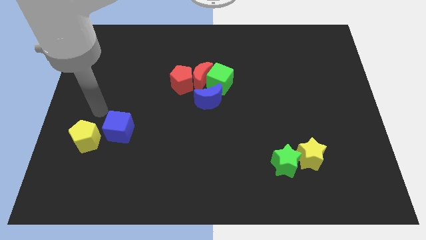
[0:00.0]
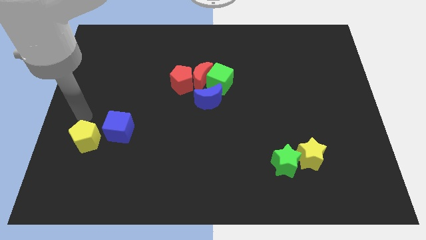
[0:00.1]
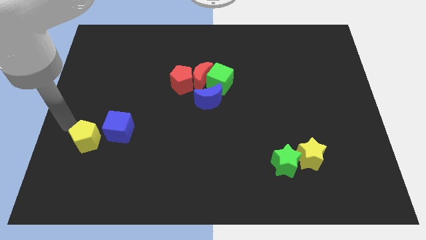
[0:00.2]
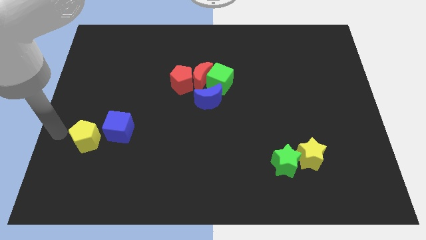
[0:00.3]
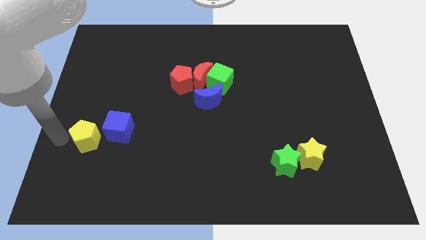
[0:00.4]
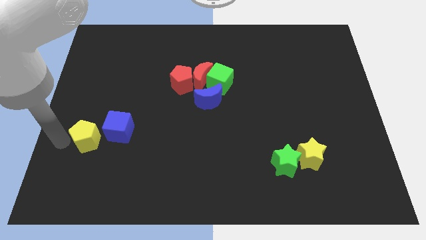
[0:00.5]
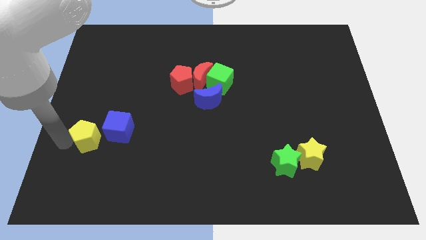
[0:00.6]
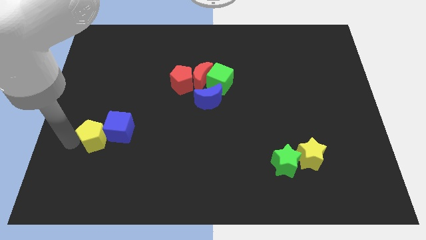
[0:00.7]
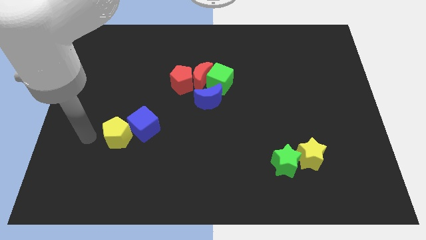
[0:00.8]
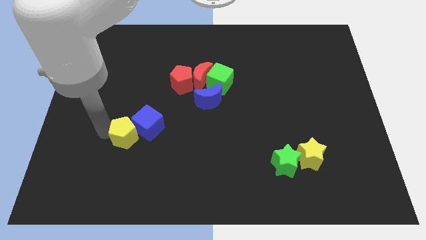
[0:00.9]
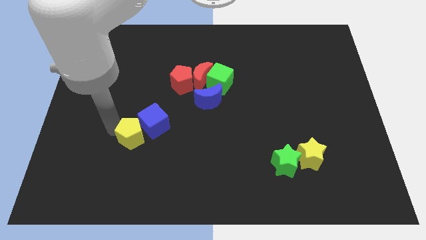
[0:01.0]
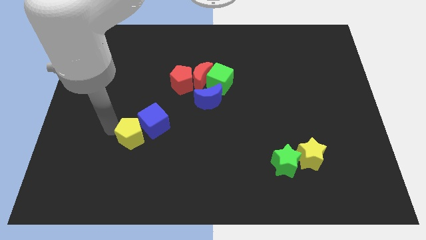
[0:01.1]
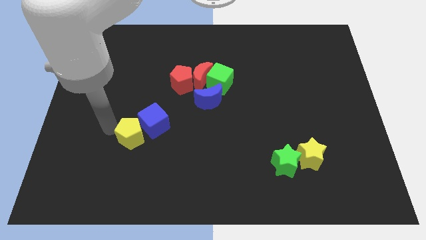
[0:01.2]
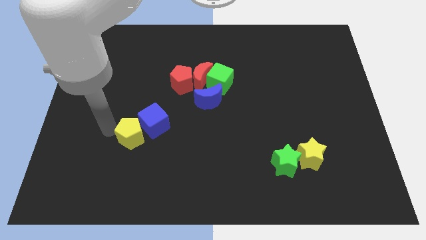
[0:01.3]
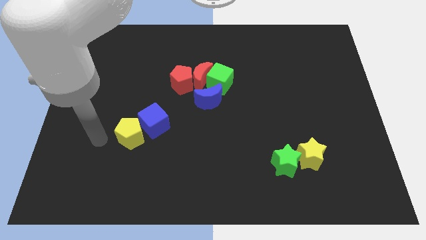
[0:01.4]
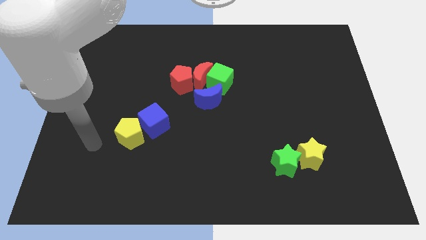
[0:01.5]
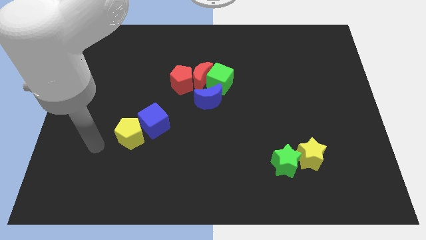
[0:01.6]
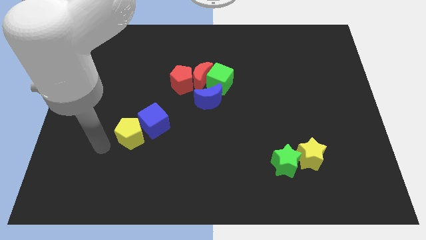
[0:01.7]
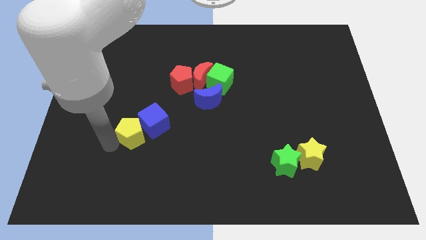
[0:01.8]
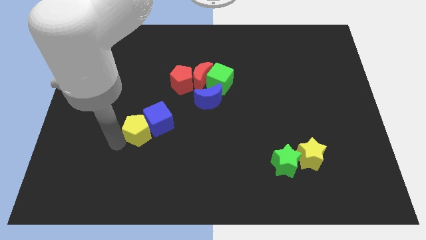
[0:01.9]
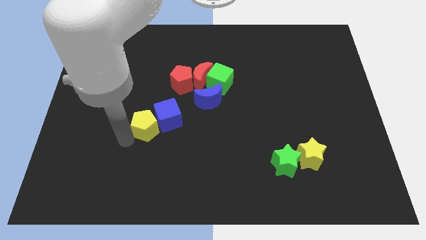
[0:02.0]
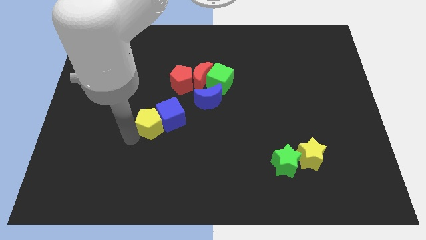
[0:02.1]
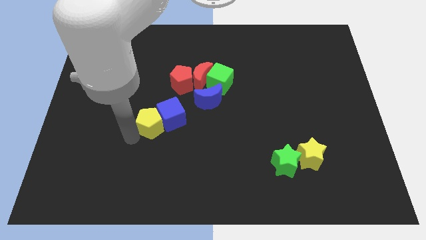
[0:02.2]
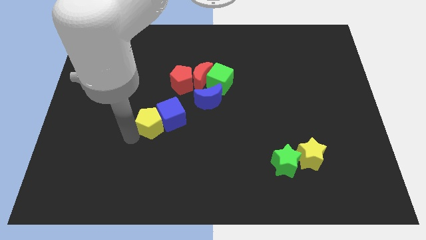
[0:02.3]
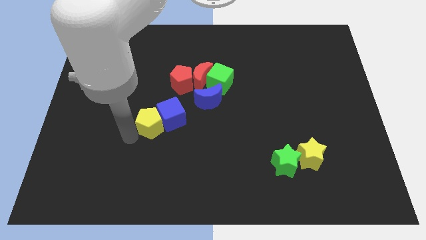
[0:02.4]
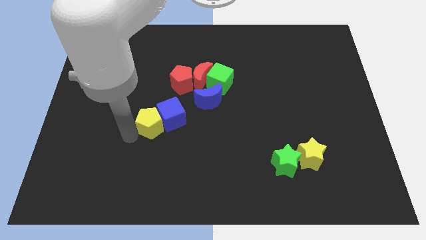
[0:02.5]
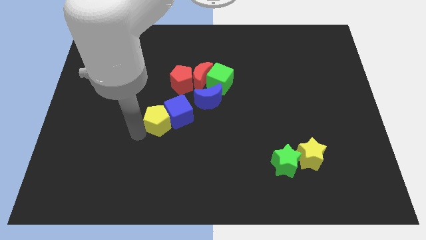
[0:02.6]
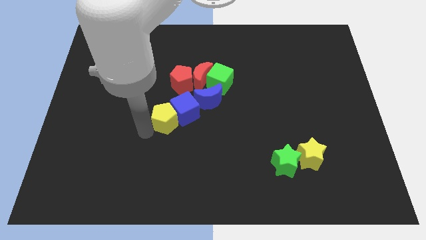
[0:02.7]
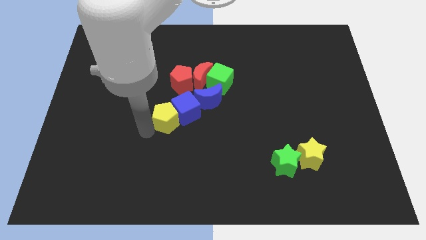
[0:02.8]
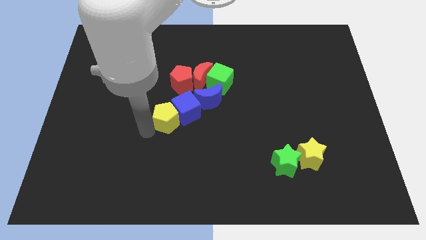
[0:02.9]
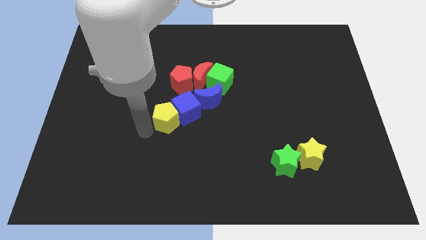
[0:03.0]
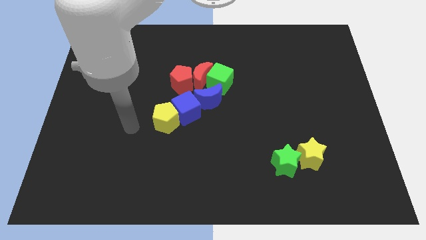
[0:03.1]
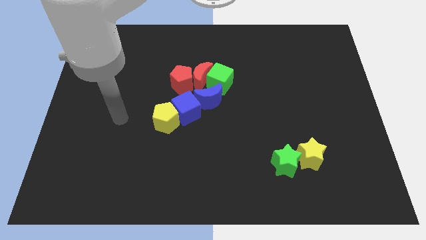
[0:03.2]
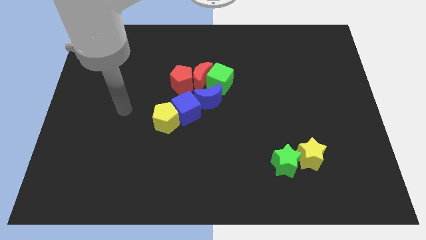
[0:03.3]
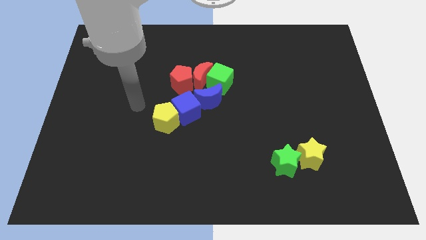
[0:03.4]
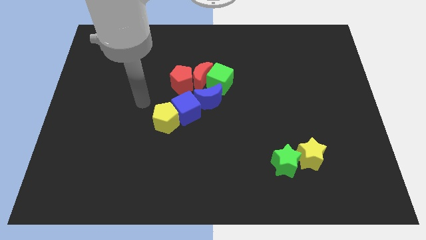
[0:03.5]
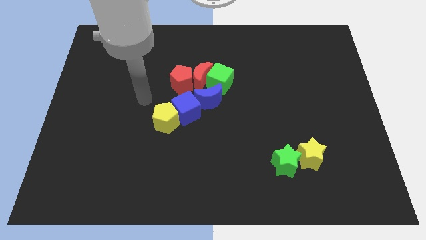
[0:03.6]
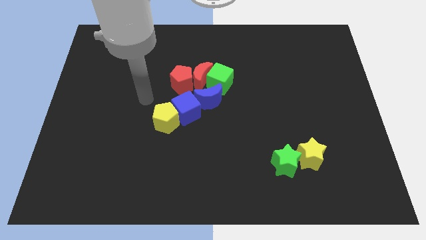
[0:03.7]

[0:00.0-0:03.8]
push the yellow pentagon and the blue cube to the center of the board

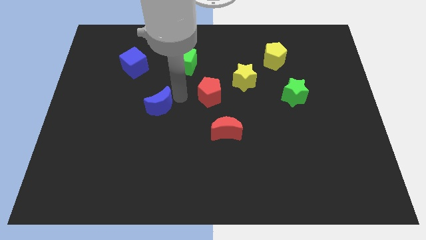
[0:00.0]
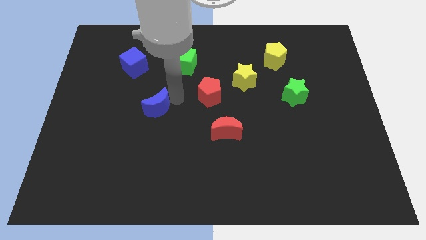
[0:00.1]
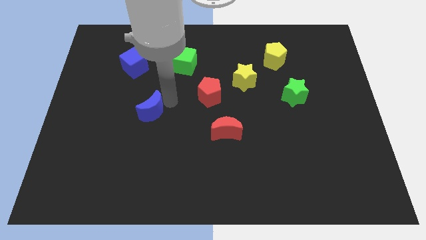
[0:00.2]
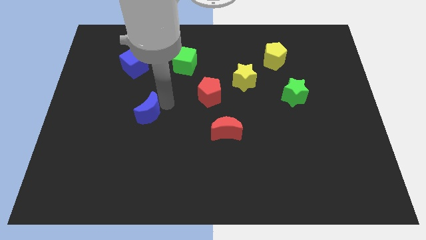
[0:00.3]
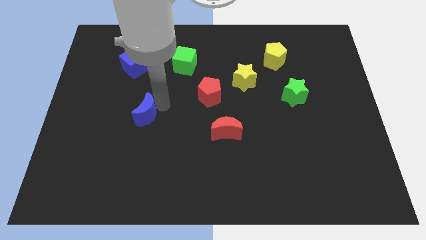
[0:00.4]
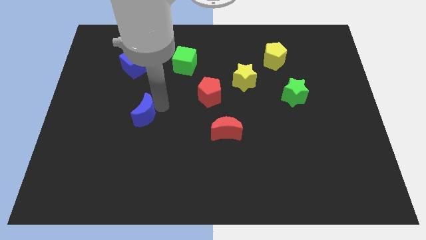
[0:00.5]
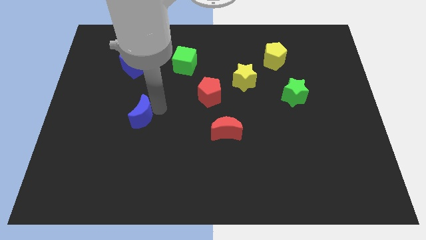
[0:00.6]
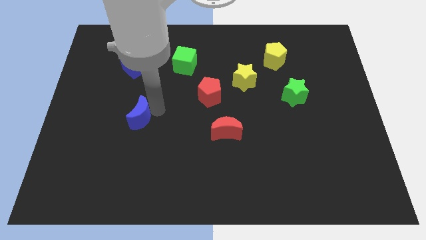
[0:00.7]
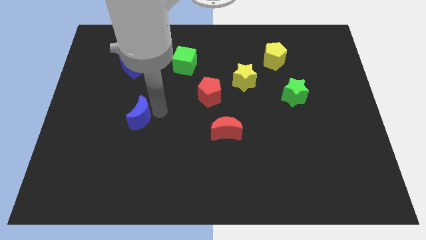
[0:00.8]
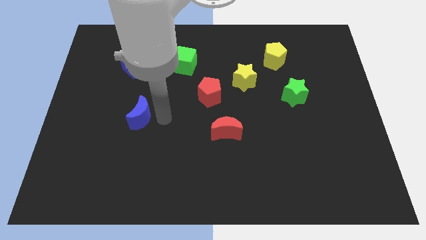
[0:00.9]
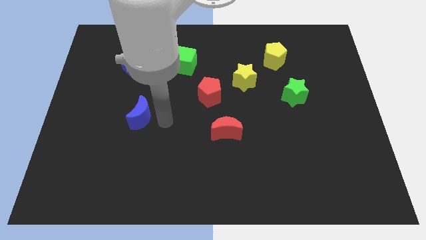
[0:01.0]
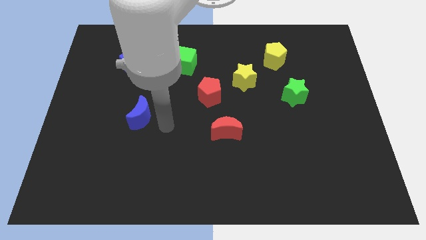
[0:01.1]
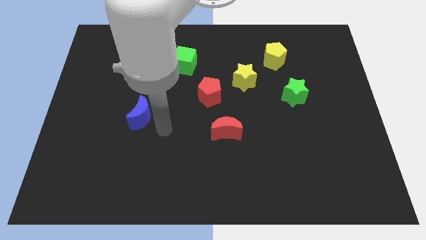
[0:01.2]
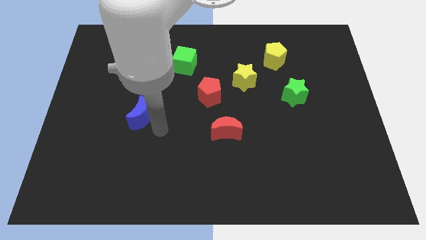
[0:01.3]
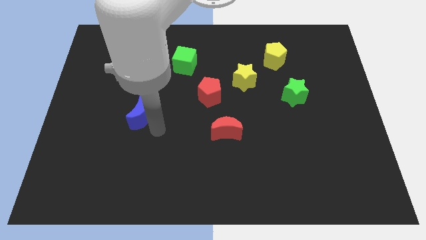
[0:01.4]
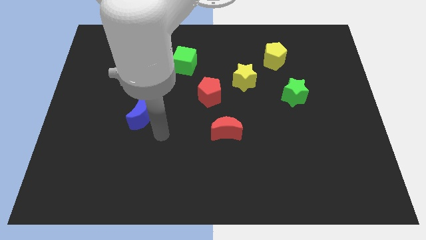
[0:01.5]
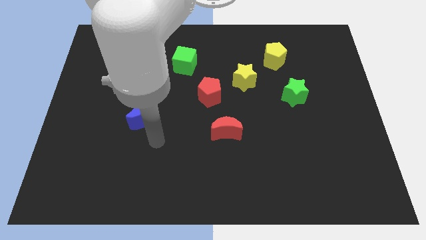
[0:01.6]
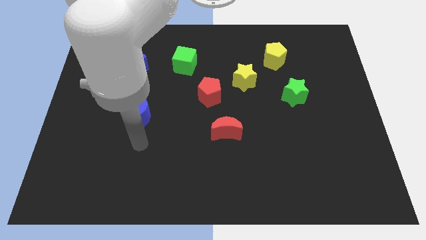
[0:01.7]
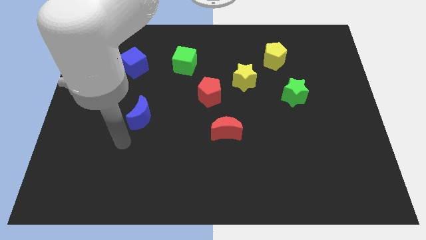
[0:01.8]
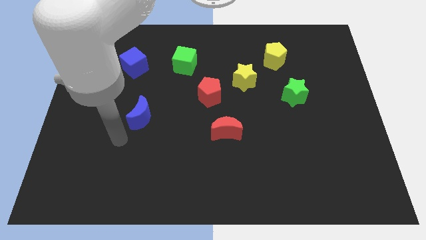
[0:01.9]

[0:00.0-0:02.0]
place the blue crescent vertically below the blue cube

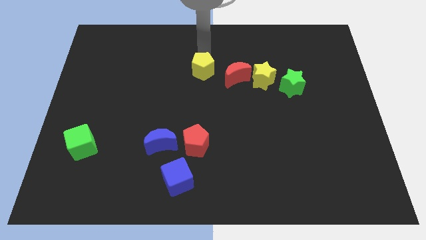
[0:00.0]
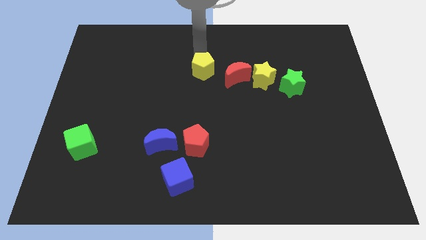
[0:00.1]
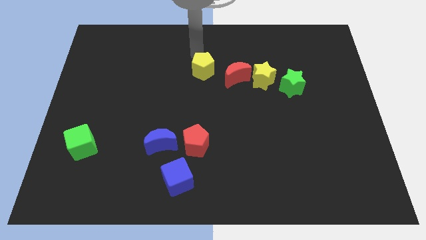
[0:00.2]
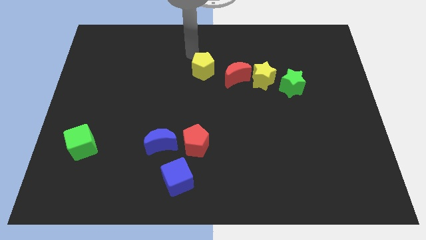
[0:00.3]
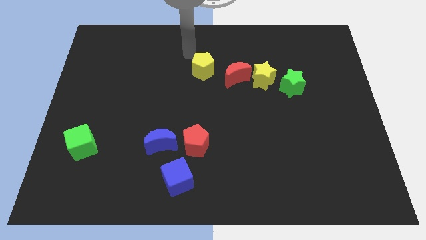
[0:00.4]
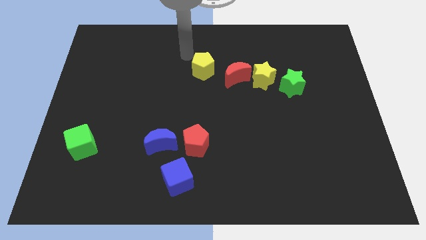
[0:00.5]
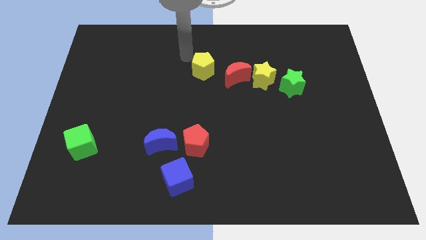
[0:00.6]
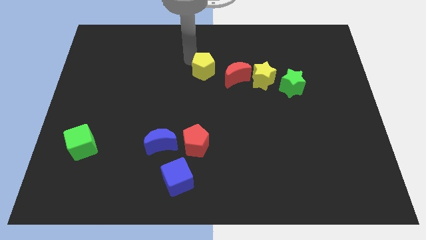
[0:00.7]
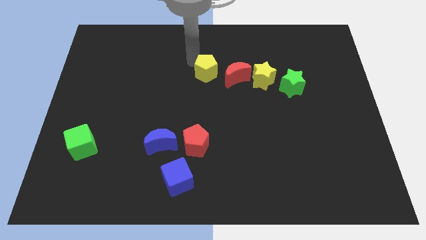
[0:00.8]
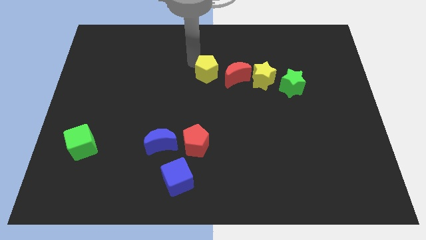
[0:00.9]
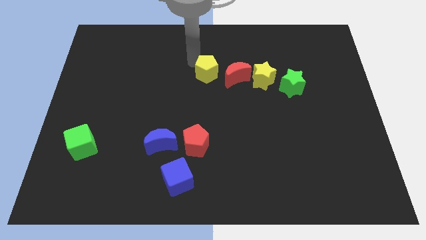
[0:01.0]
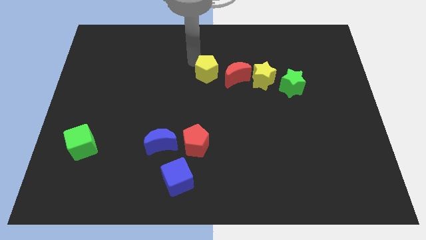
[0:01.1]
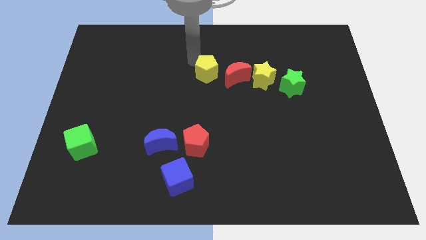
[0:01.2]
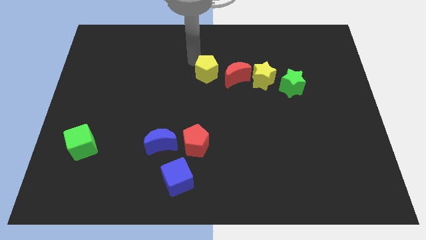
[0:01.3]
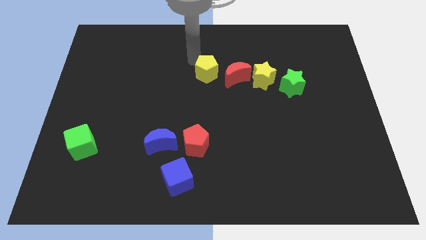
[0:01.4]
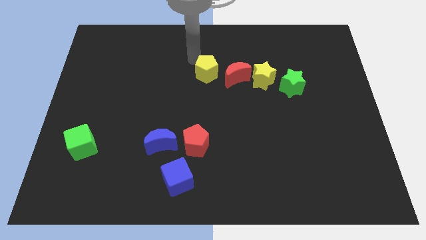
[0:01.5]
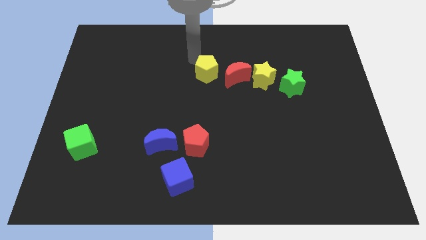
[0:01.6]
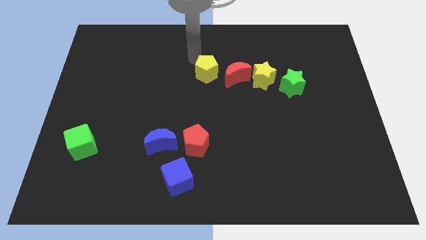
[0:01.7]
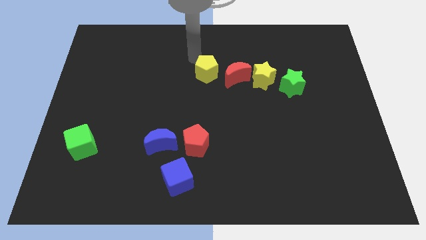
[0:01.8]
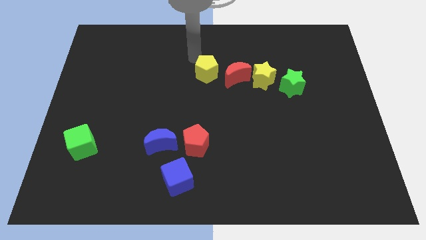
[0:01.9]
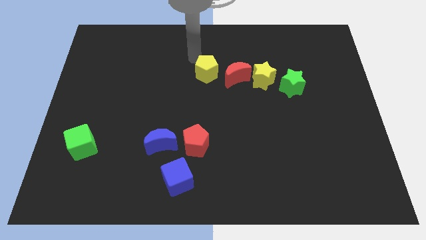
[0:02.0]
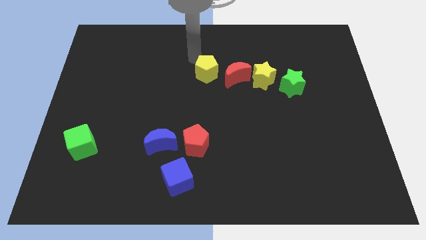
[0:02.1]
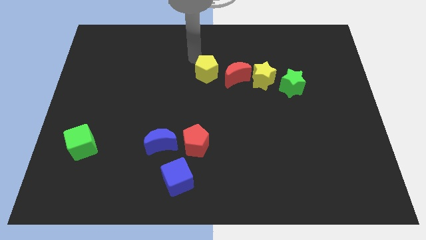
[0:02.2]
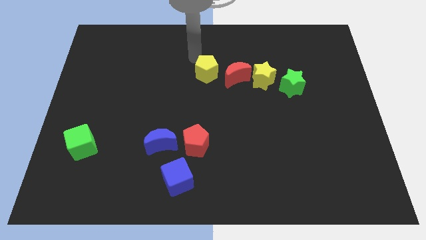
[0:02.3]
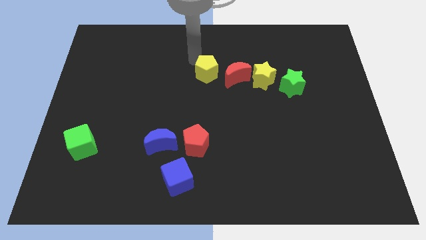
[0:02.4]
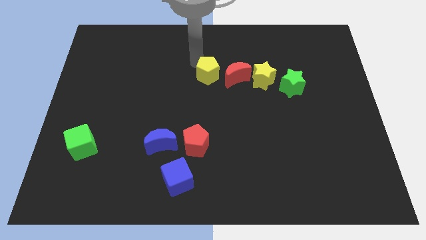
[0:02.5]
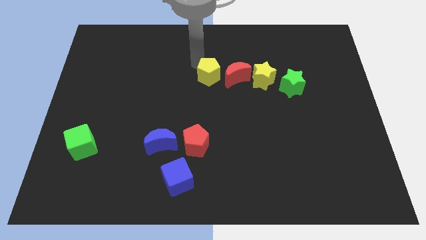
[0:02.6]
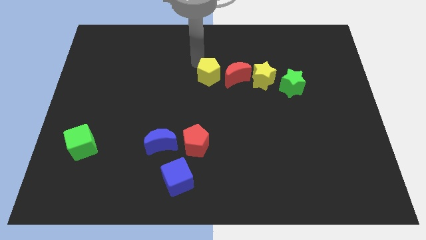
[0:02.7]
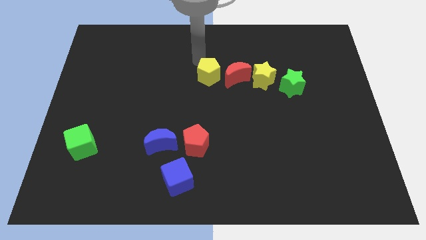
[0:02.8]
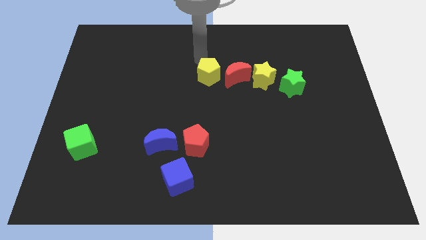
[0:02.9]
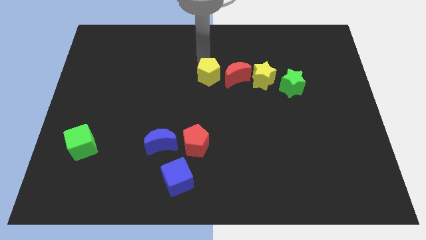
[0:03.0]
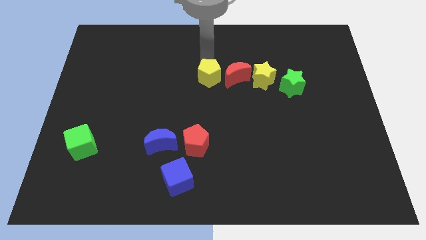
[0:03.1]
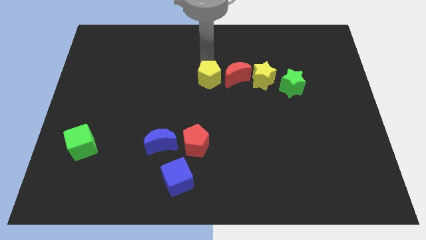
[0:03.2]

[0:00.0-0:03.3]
slide the yellow pentagon slightly down
